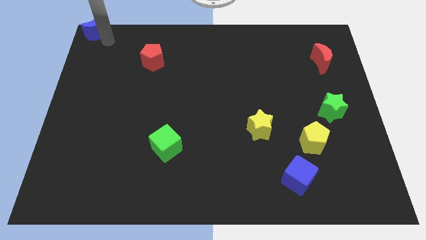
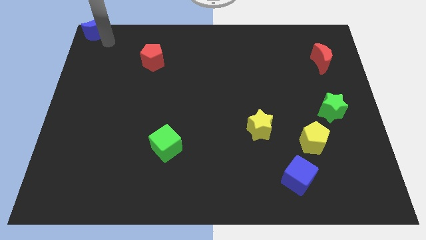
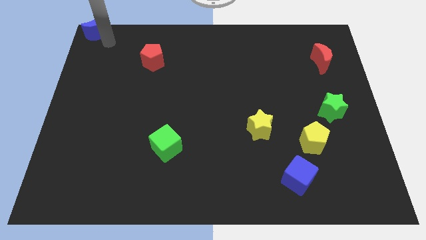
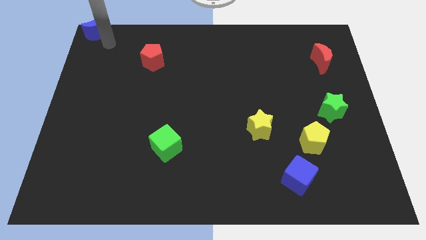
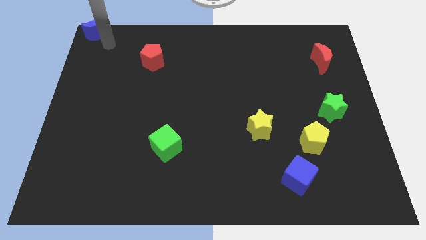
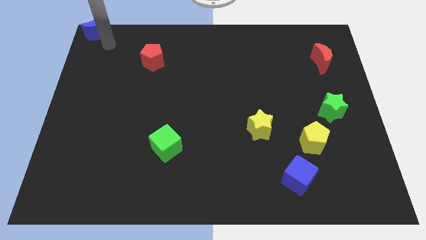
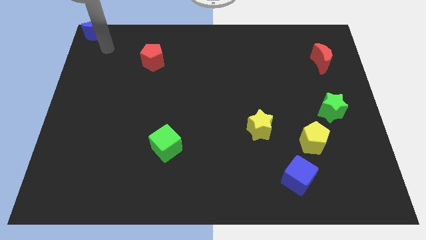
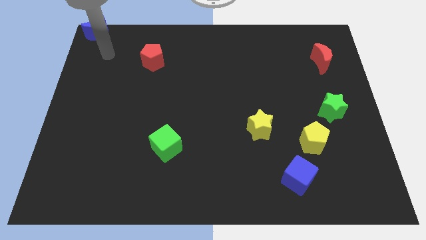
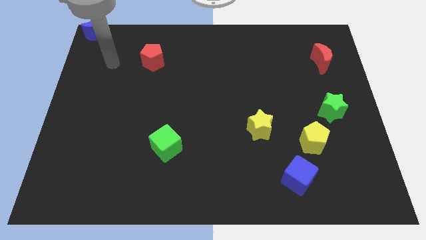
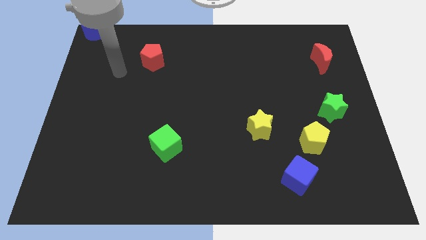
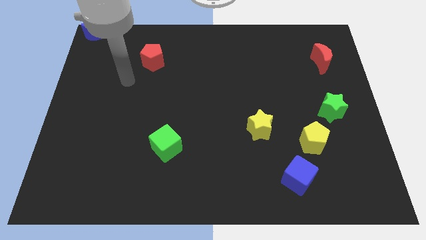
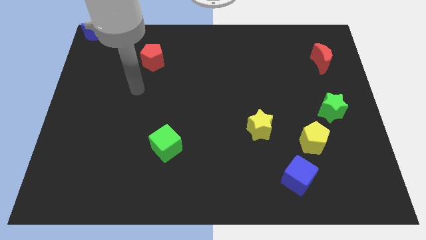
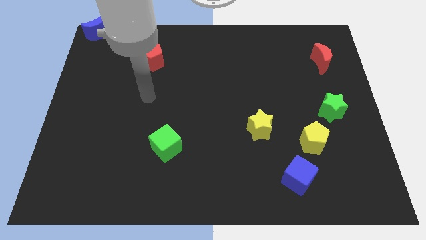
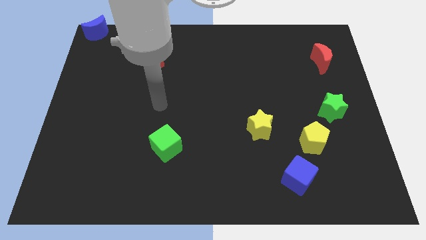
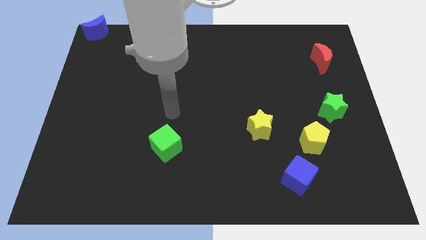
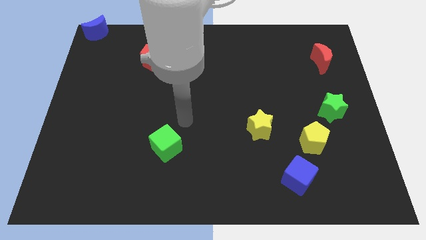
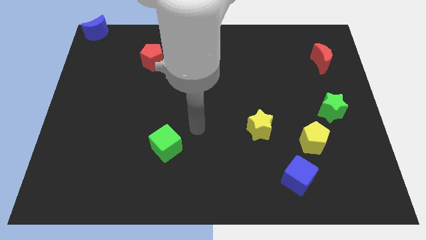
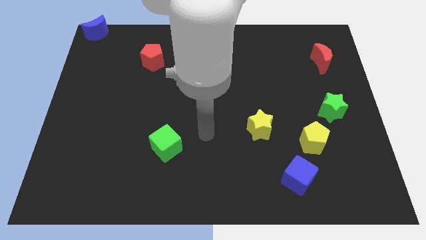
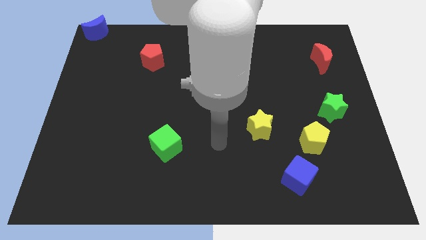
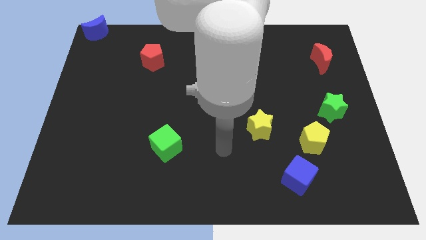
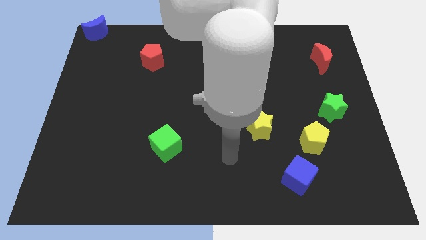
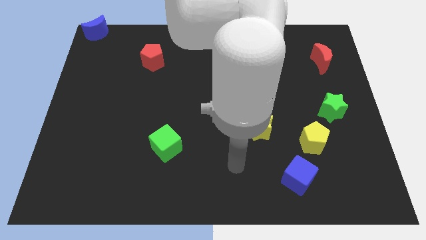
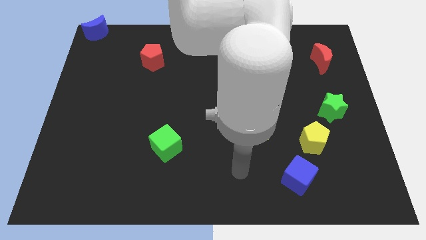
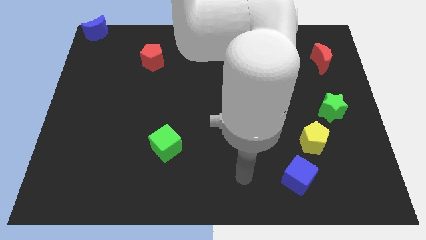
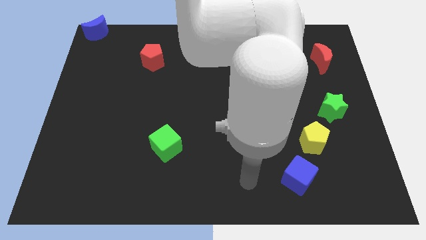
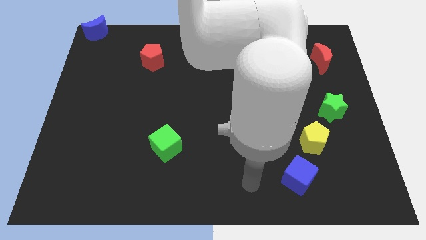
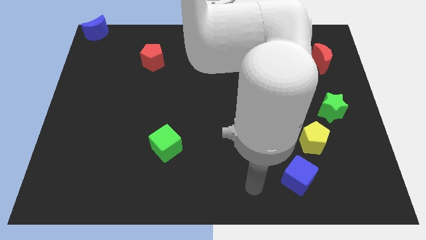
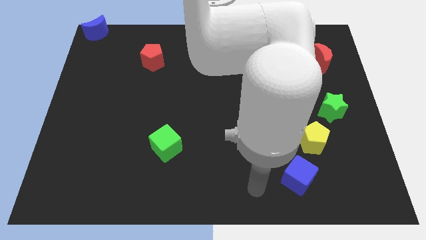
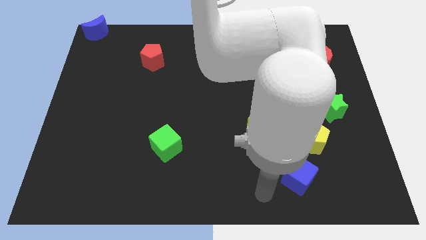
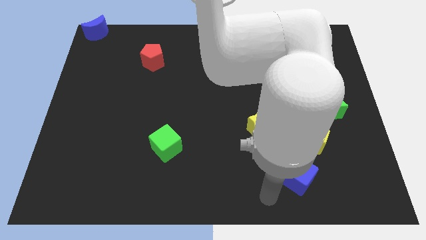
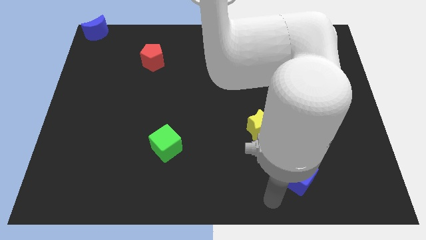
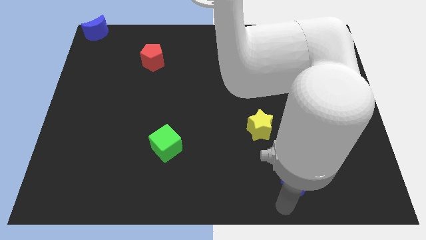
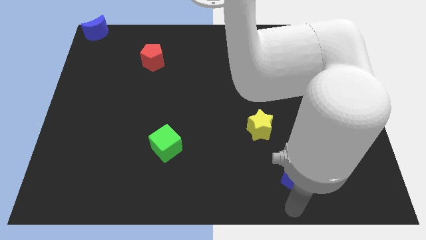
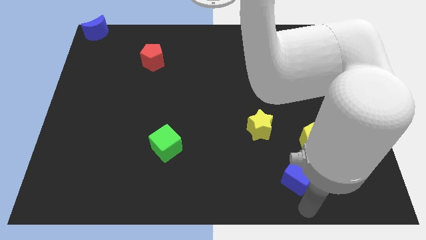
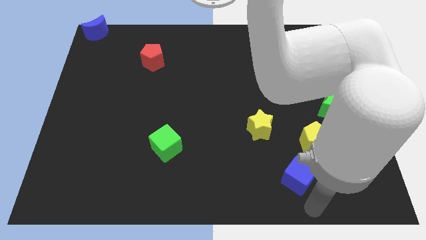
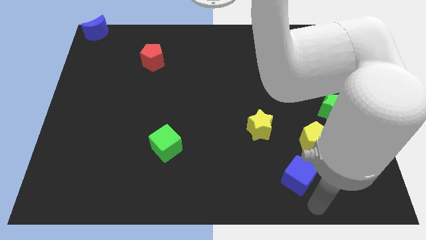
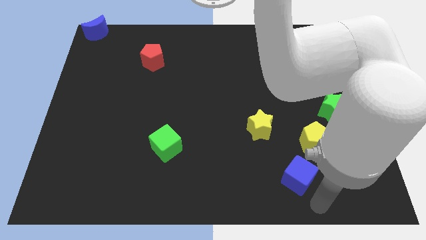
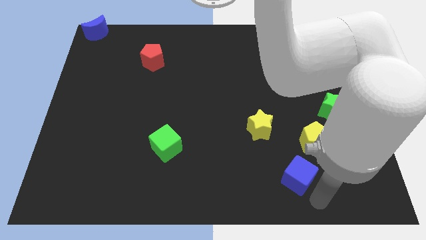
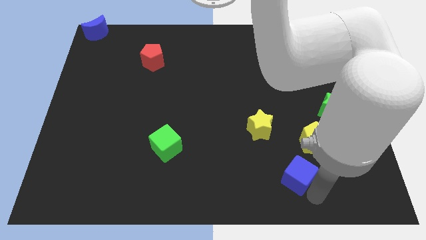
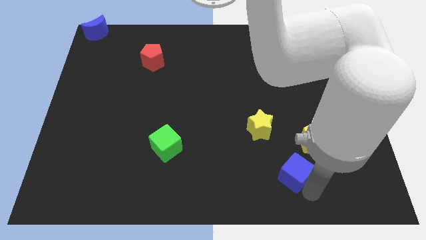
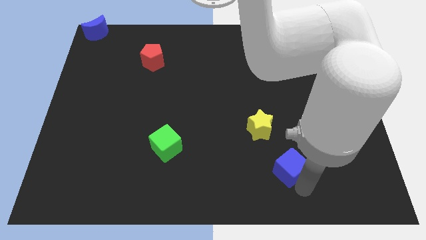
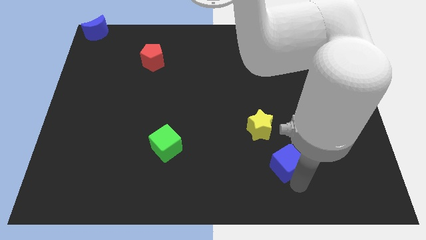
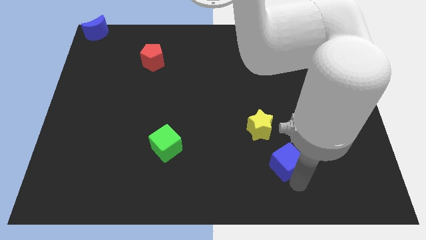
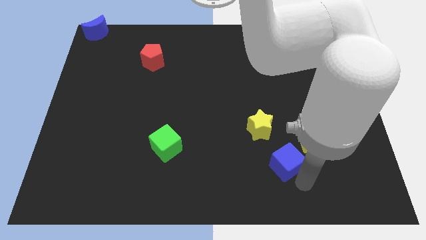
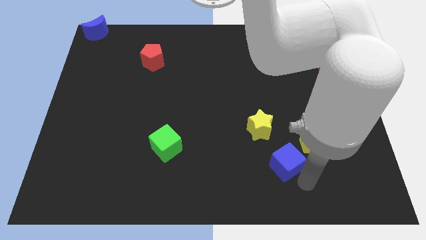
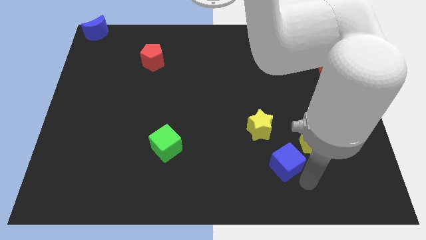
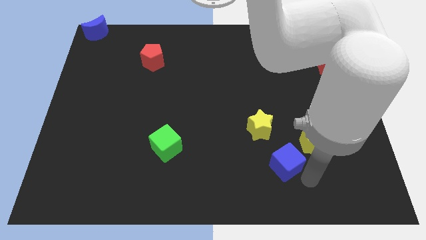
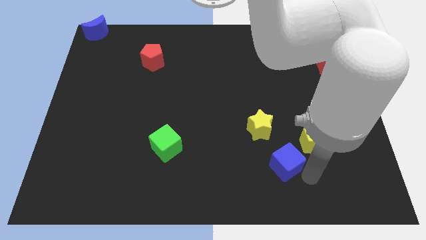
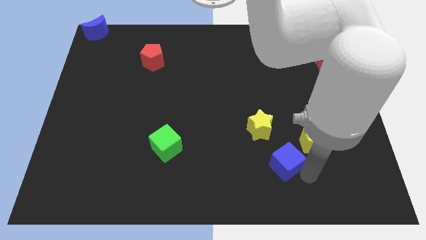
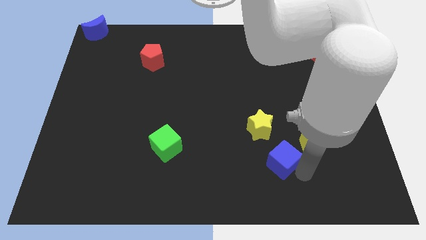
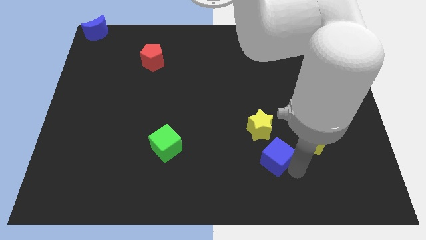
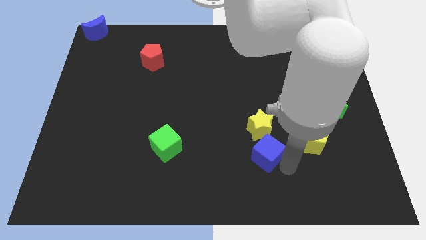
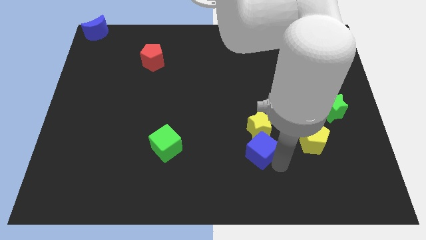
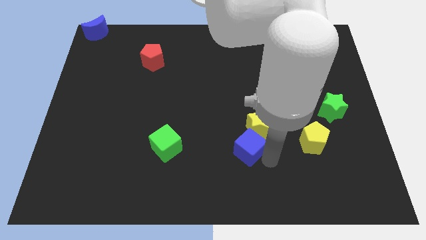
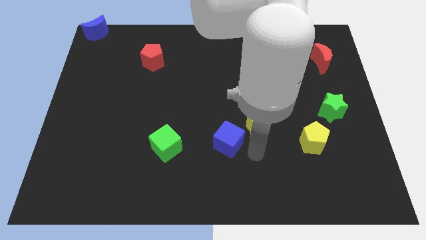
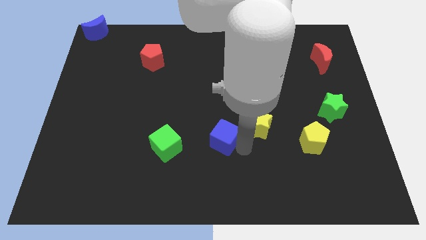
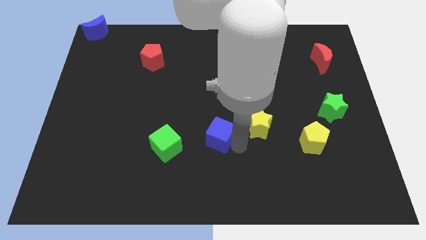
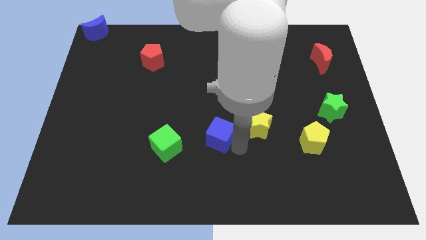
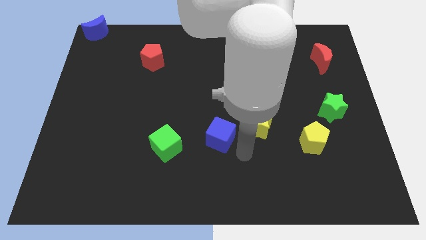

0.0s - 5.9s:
move the blue cube in between the green cube and yellow star

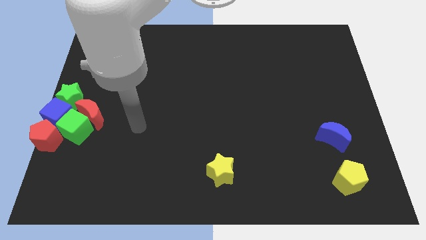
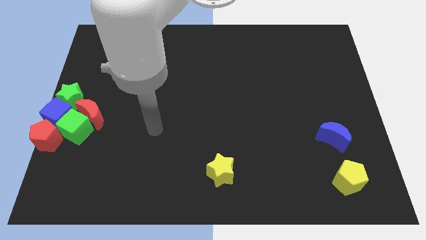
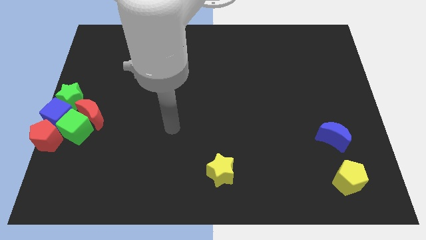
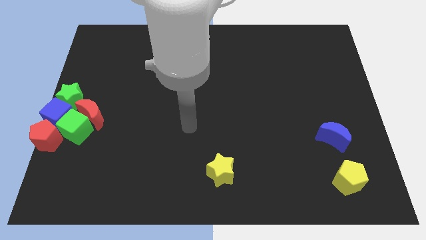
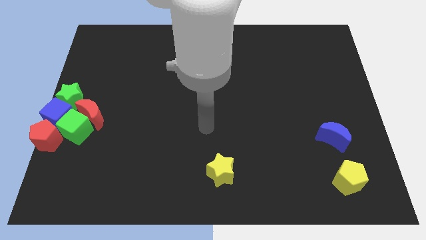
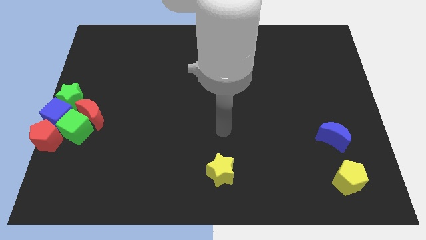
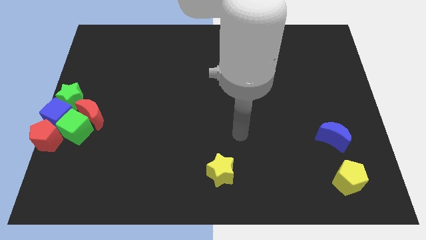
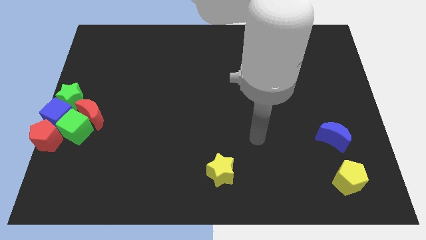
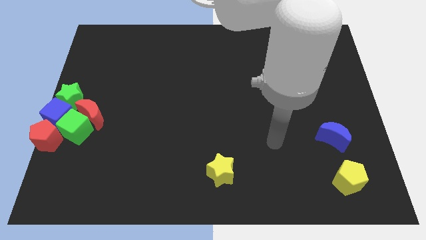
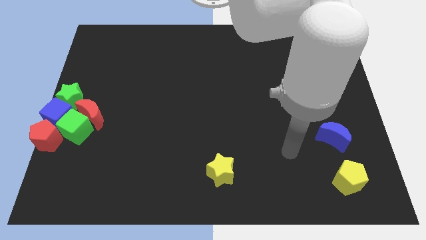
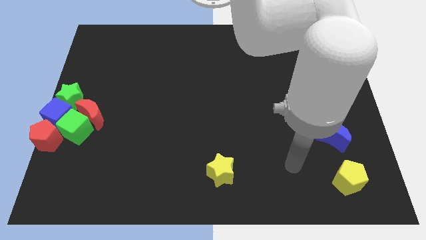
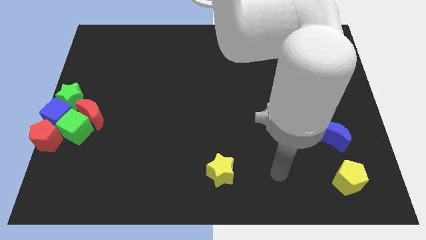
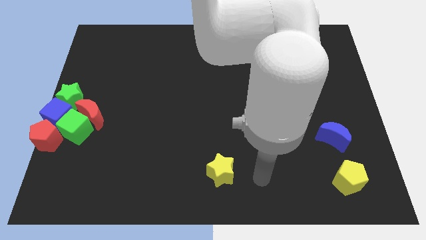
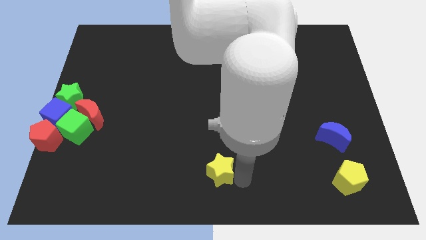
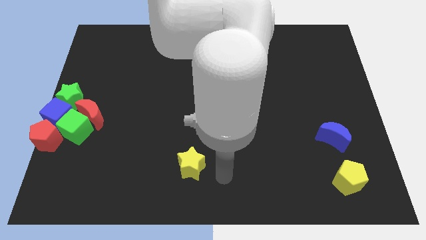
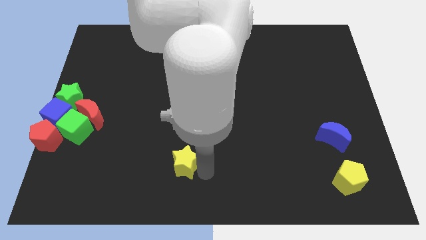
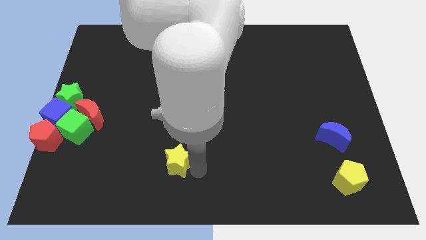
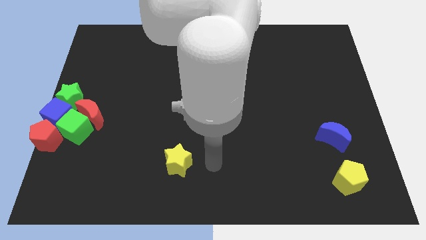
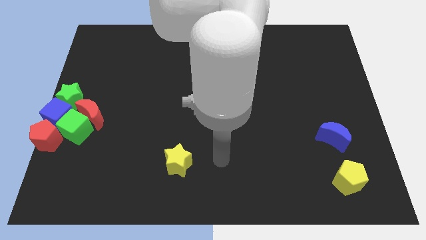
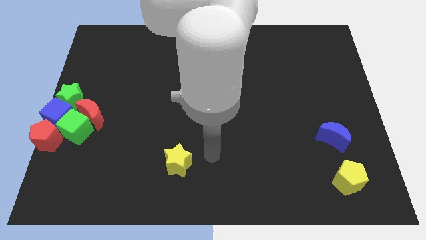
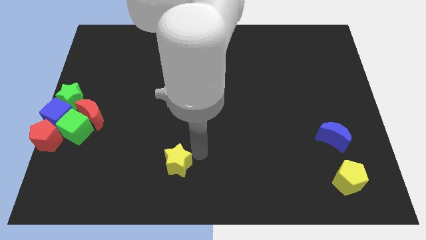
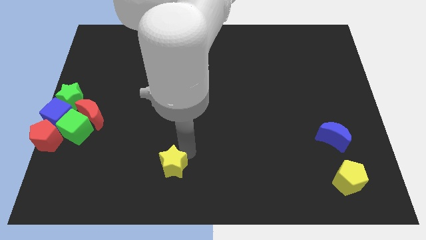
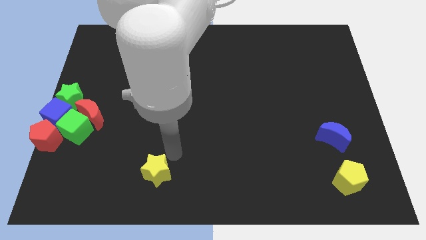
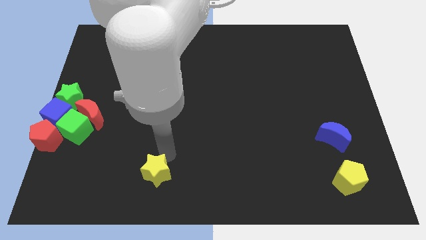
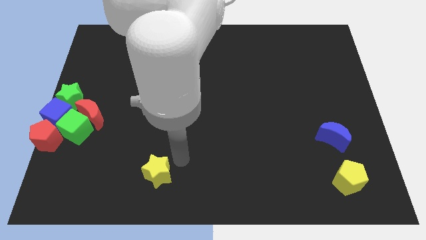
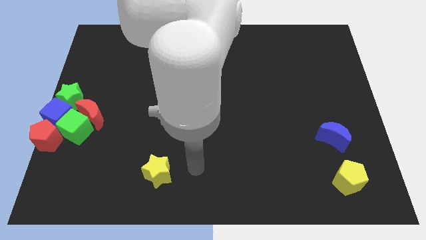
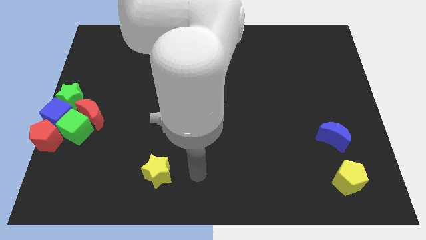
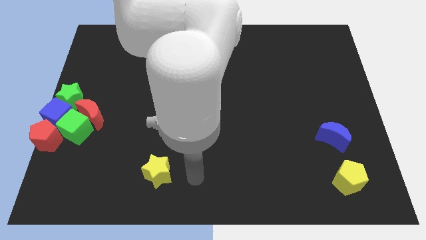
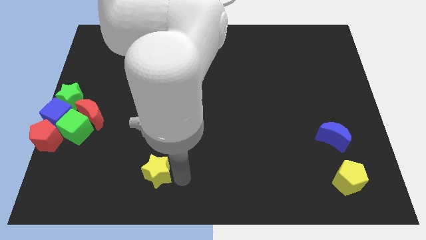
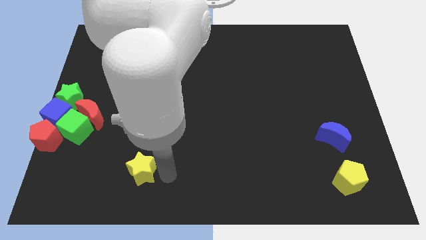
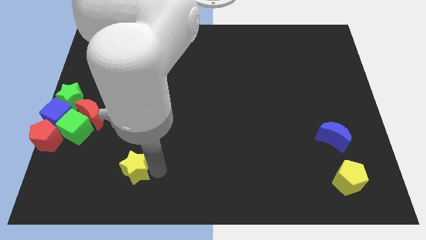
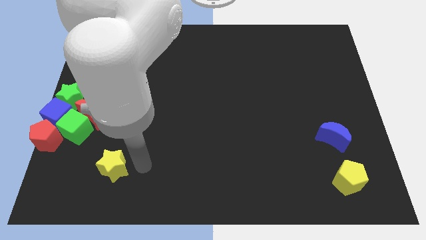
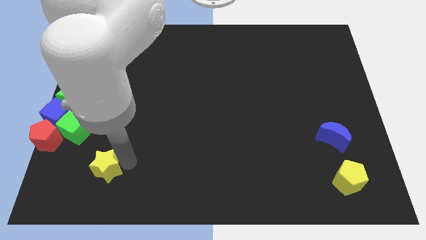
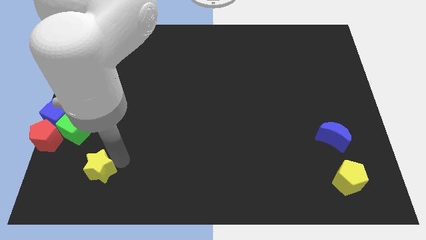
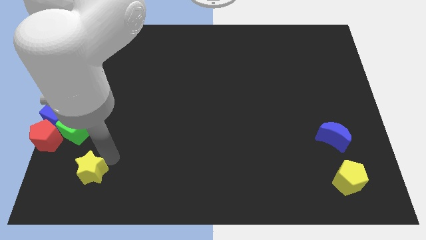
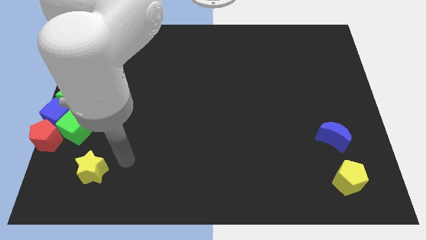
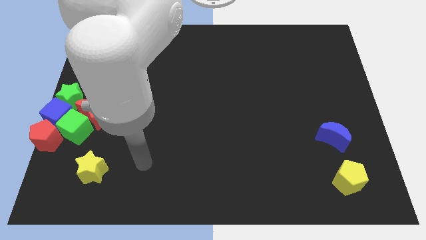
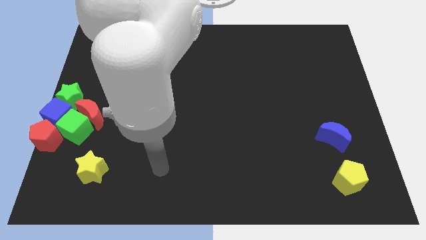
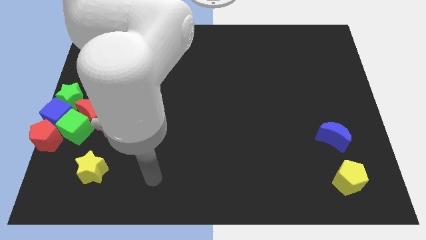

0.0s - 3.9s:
move yellow star below the green cube
